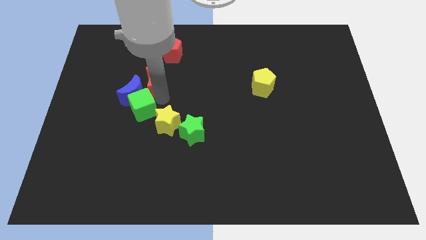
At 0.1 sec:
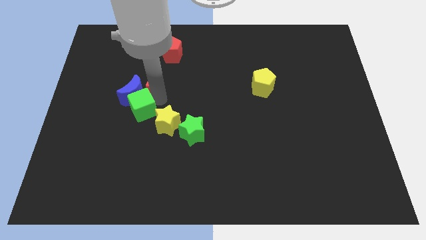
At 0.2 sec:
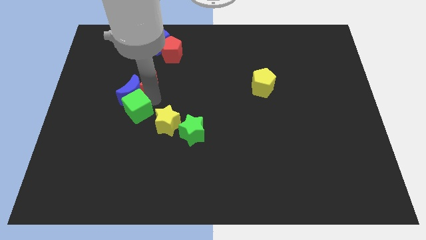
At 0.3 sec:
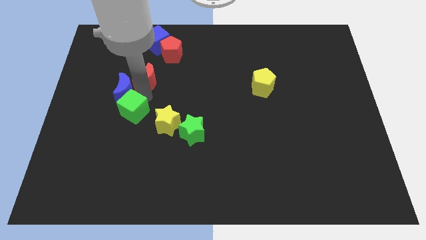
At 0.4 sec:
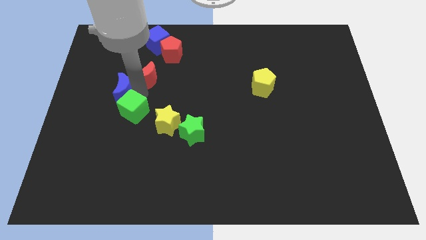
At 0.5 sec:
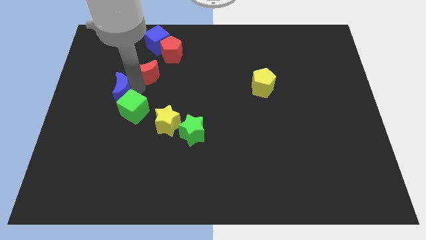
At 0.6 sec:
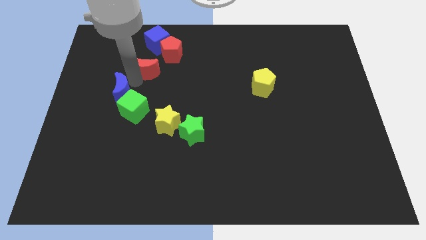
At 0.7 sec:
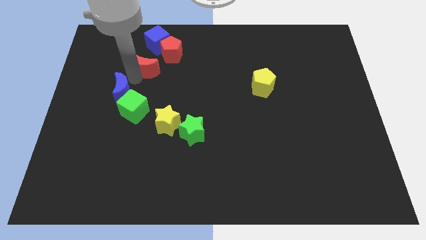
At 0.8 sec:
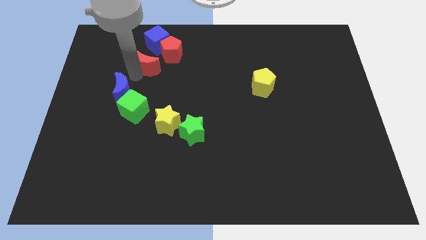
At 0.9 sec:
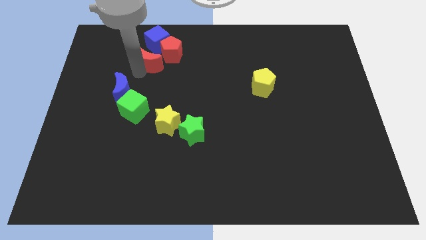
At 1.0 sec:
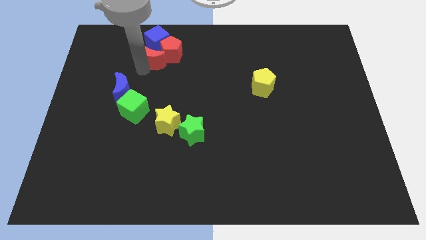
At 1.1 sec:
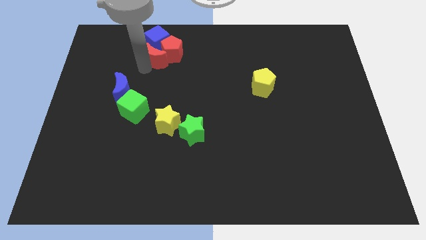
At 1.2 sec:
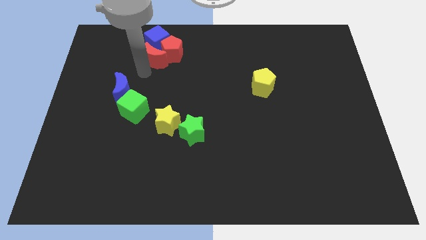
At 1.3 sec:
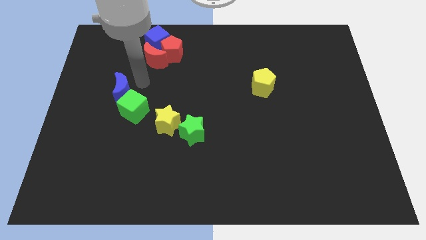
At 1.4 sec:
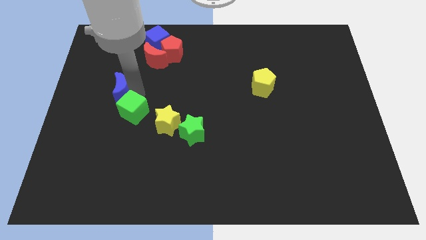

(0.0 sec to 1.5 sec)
move the red crescent to the bottom of the blue cube

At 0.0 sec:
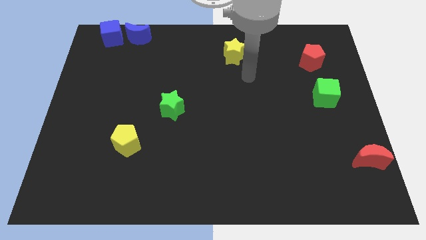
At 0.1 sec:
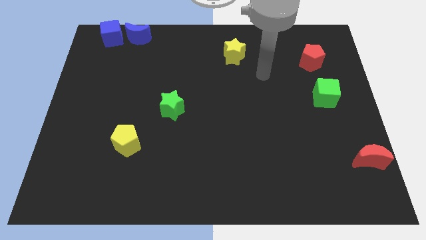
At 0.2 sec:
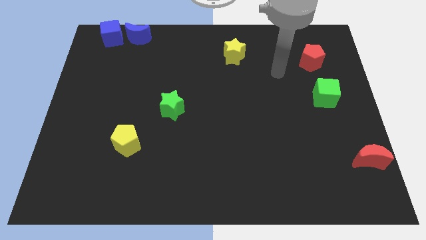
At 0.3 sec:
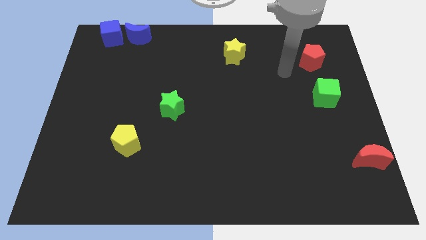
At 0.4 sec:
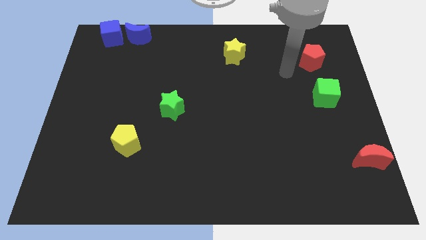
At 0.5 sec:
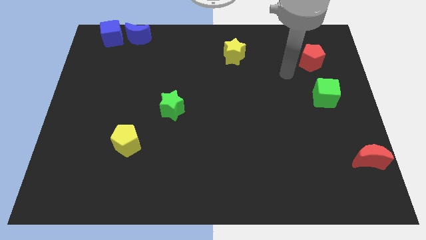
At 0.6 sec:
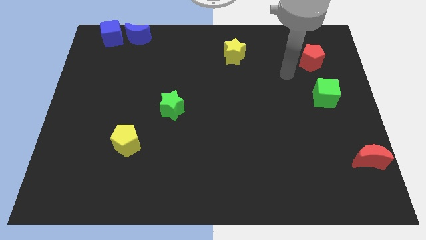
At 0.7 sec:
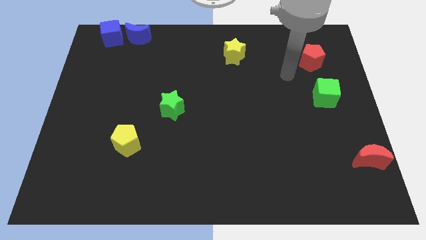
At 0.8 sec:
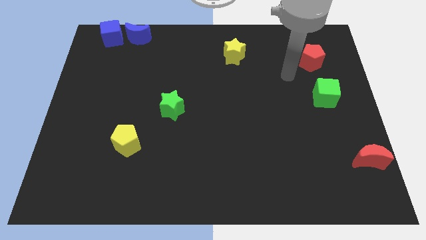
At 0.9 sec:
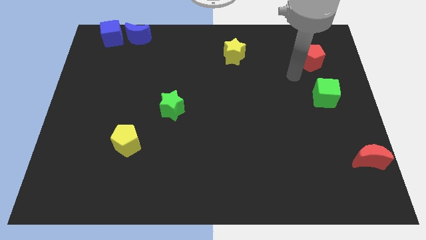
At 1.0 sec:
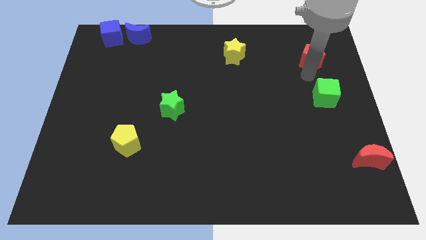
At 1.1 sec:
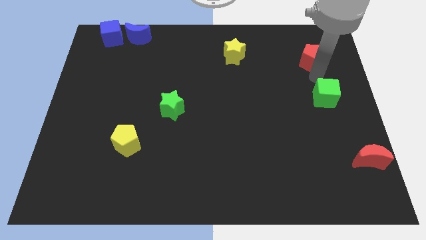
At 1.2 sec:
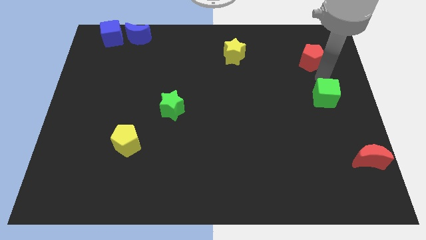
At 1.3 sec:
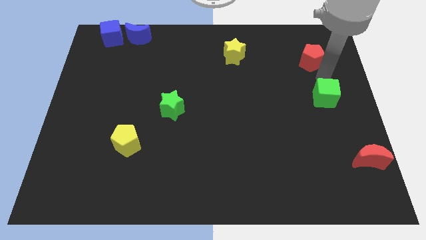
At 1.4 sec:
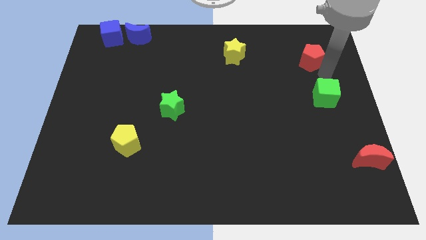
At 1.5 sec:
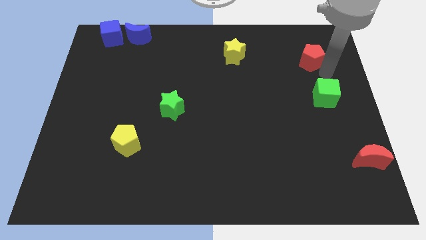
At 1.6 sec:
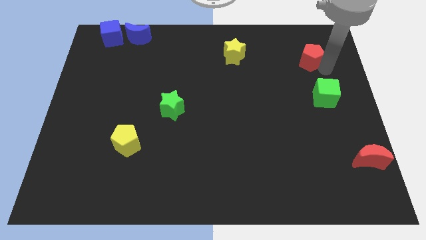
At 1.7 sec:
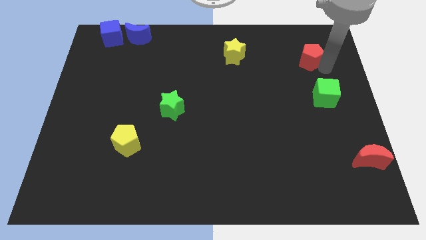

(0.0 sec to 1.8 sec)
move your arm towards the red pentagon

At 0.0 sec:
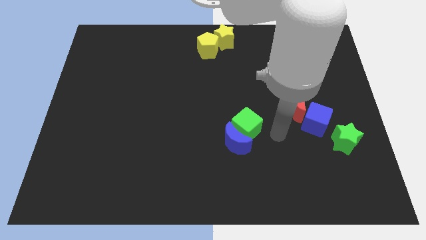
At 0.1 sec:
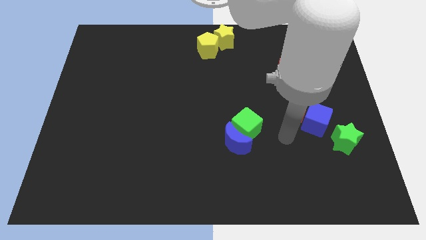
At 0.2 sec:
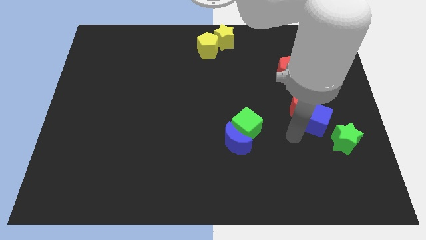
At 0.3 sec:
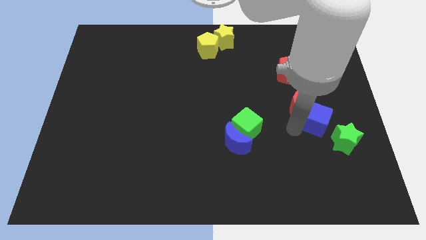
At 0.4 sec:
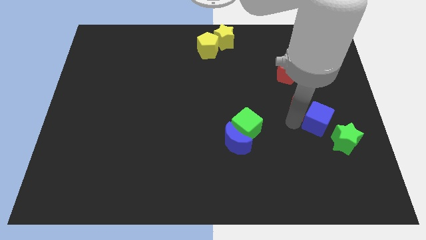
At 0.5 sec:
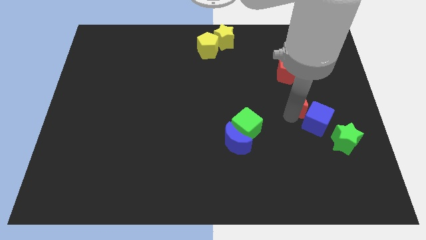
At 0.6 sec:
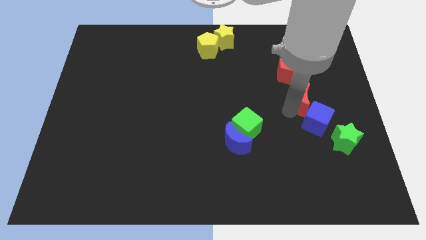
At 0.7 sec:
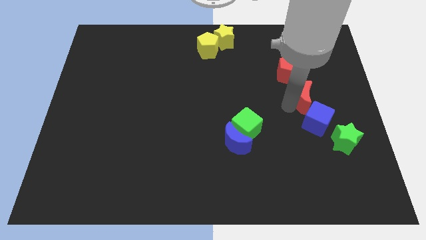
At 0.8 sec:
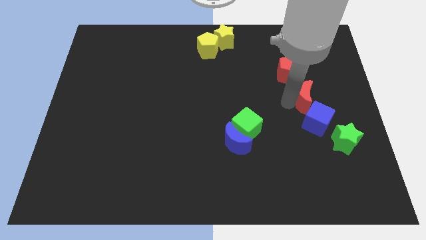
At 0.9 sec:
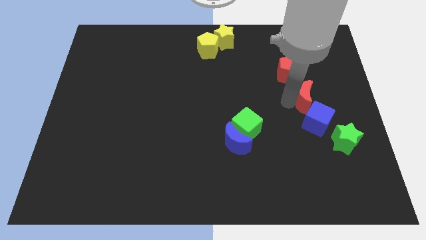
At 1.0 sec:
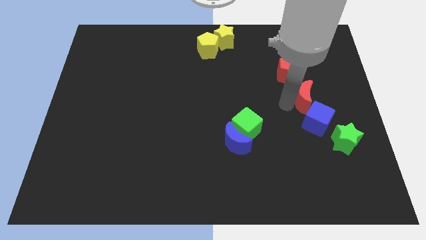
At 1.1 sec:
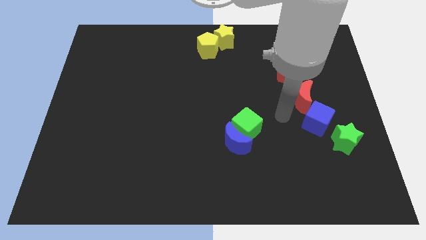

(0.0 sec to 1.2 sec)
push the red moon slightly right

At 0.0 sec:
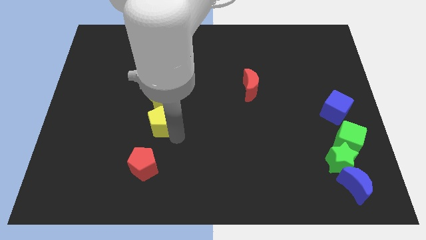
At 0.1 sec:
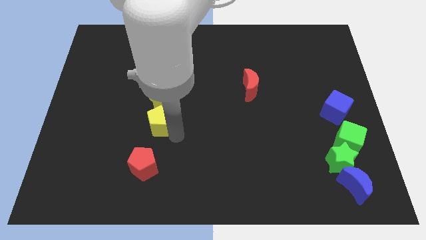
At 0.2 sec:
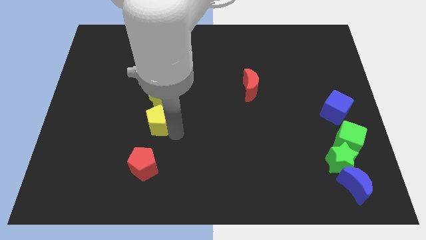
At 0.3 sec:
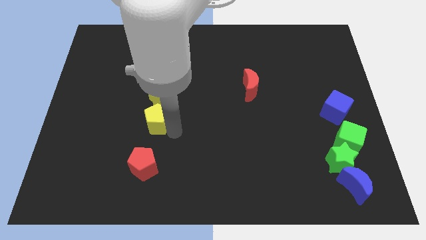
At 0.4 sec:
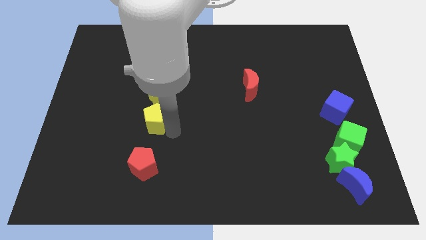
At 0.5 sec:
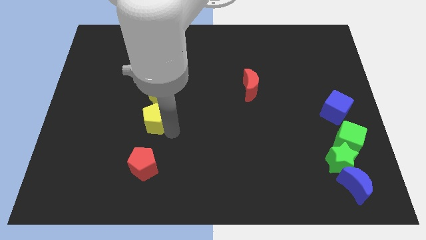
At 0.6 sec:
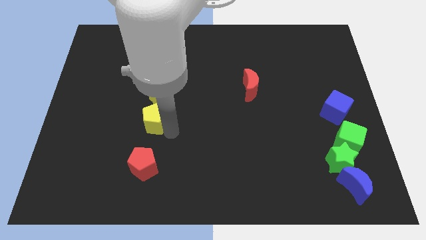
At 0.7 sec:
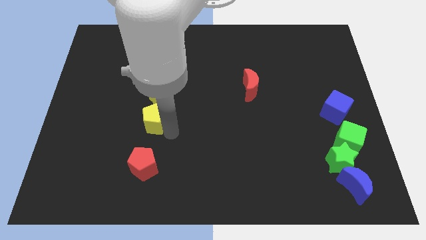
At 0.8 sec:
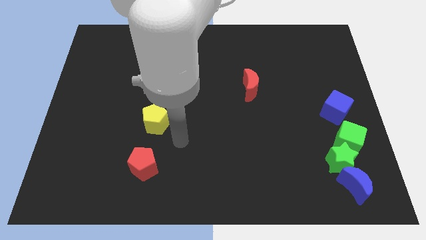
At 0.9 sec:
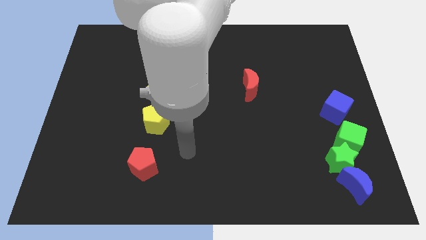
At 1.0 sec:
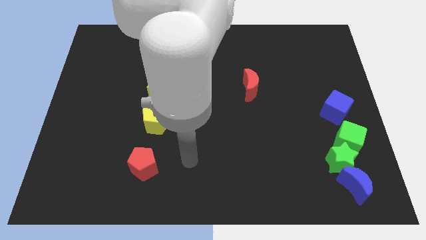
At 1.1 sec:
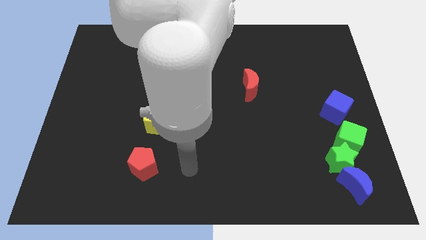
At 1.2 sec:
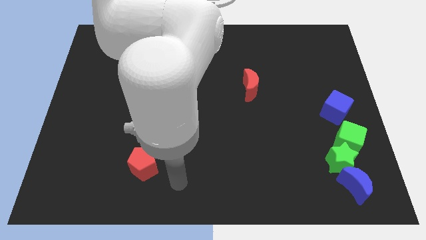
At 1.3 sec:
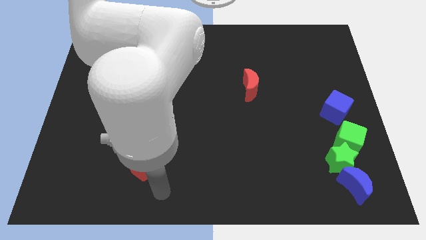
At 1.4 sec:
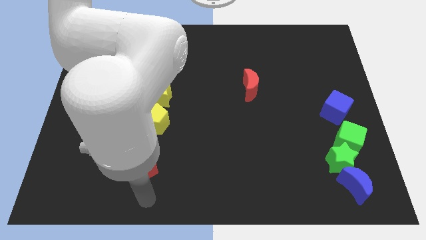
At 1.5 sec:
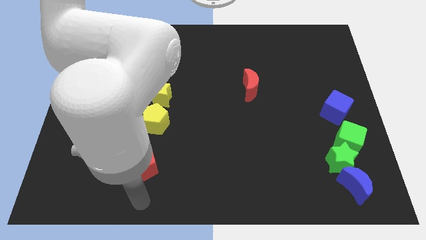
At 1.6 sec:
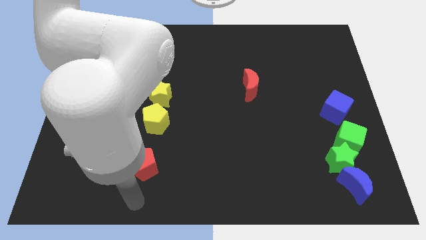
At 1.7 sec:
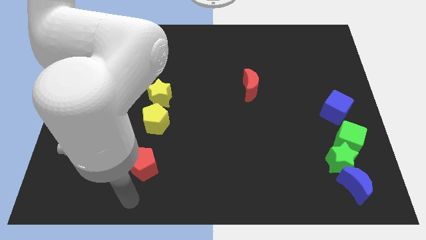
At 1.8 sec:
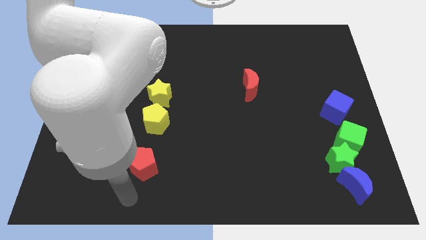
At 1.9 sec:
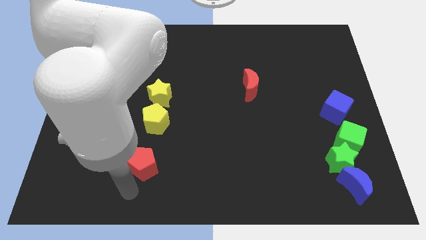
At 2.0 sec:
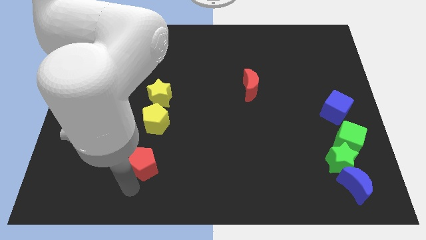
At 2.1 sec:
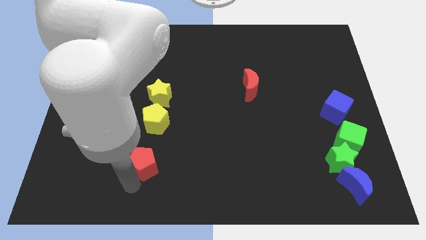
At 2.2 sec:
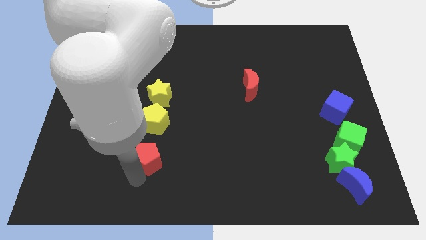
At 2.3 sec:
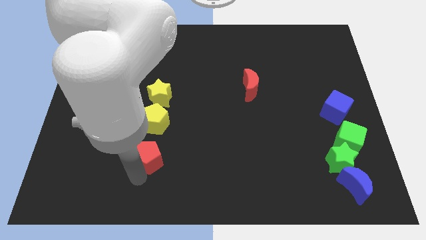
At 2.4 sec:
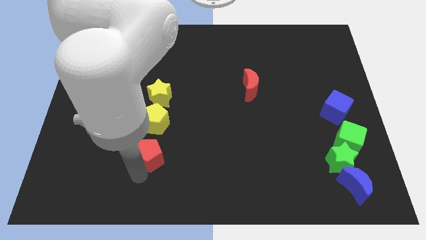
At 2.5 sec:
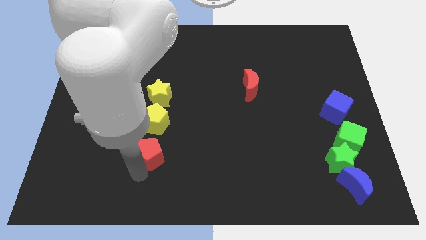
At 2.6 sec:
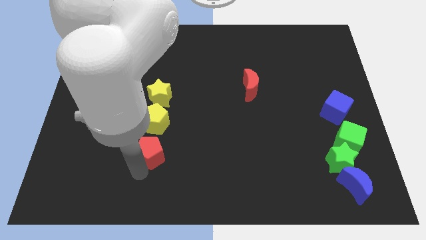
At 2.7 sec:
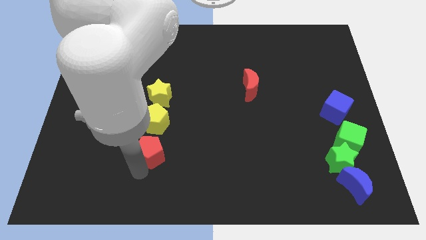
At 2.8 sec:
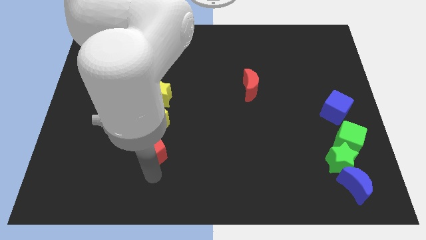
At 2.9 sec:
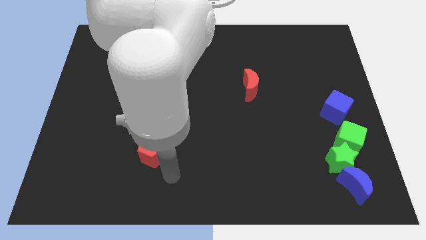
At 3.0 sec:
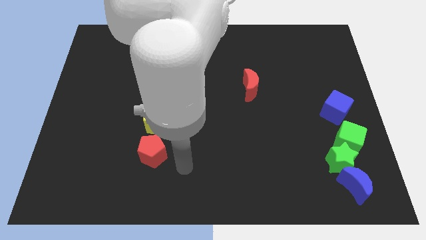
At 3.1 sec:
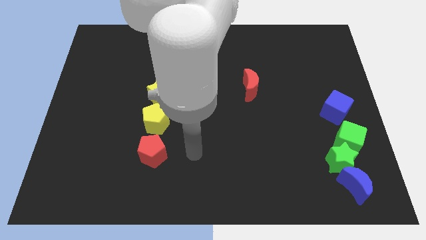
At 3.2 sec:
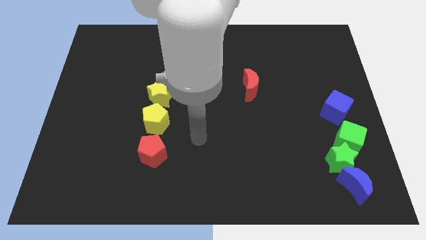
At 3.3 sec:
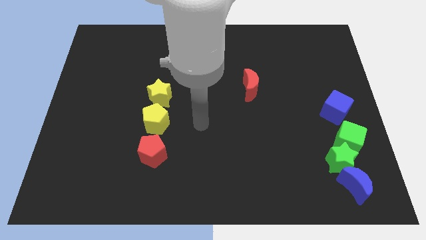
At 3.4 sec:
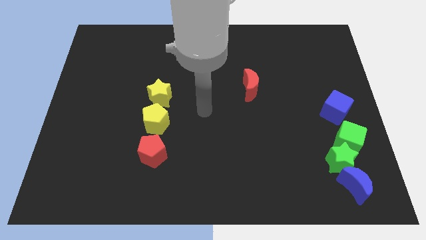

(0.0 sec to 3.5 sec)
move red pentagon below the yellow pentagon

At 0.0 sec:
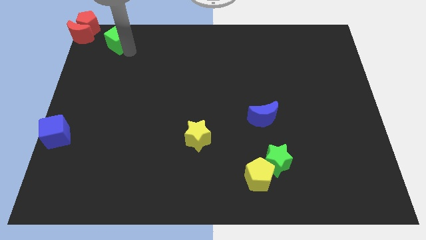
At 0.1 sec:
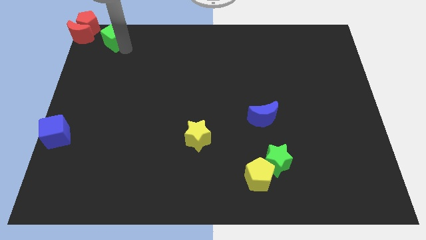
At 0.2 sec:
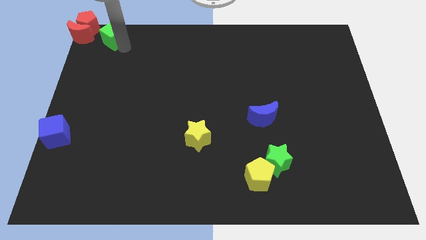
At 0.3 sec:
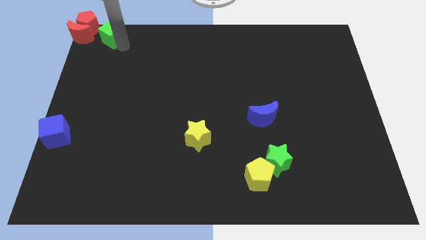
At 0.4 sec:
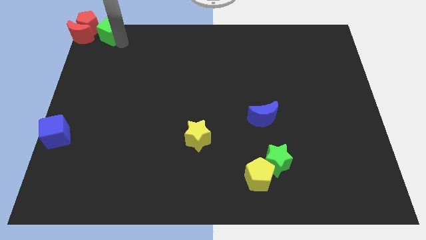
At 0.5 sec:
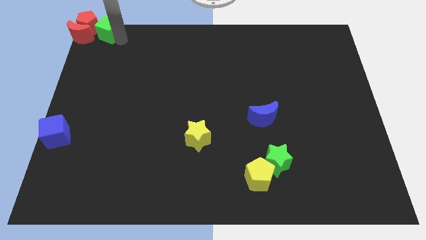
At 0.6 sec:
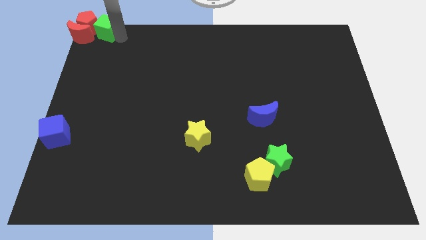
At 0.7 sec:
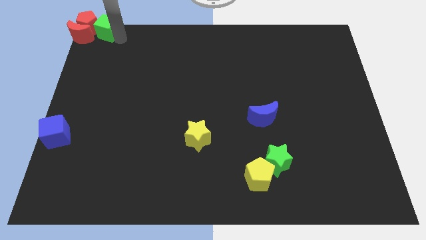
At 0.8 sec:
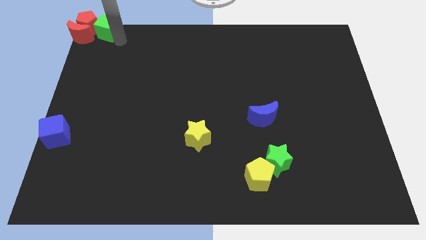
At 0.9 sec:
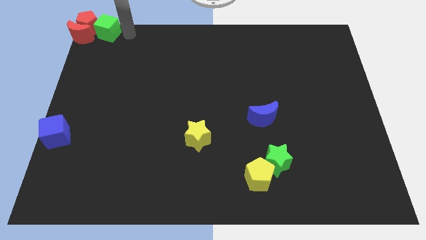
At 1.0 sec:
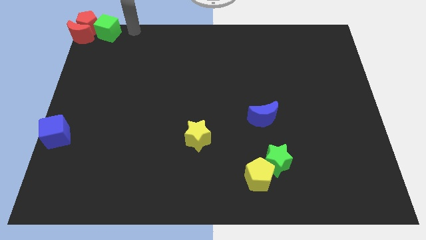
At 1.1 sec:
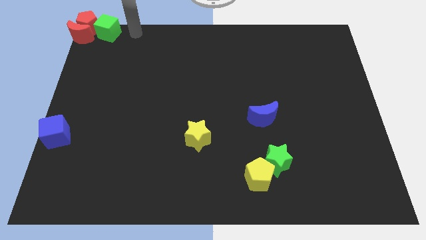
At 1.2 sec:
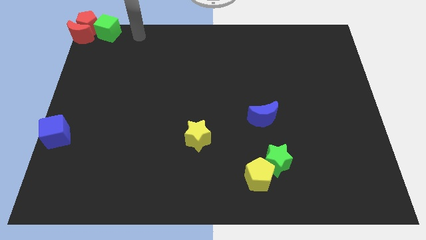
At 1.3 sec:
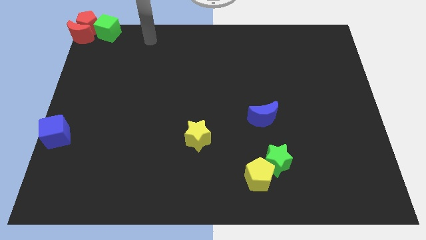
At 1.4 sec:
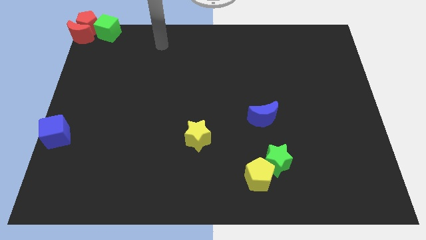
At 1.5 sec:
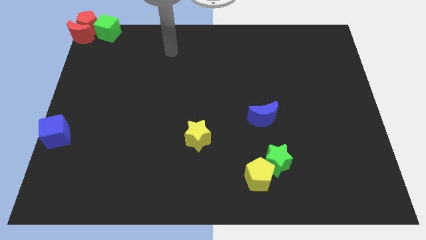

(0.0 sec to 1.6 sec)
push green cube into red pentagon
